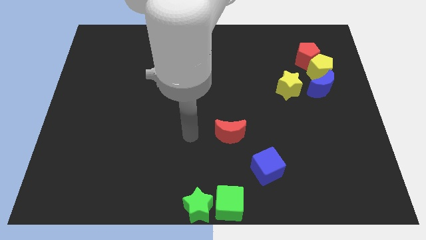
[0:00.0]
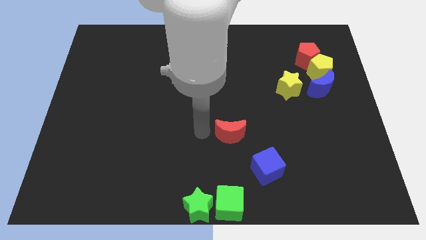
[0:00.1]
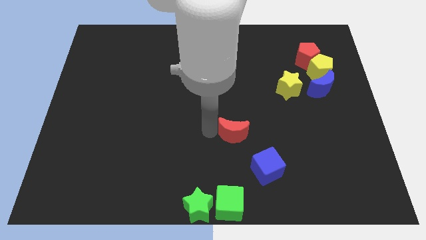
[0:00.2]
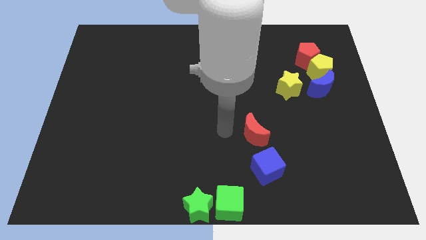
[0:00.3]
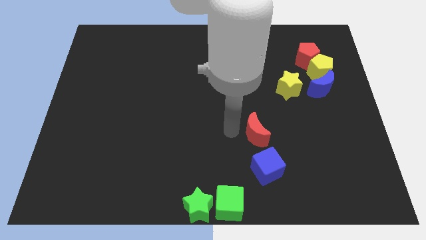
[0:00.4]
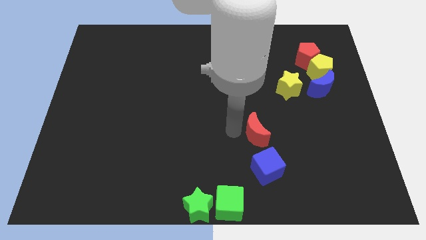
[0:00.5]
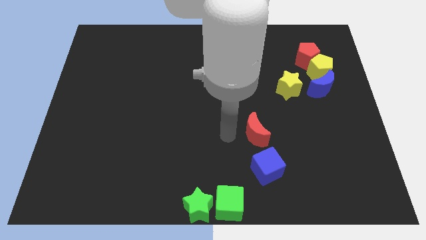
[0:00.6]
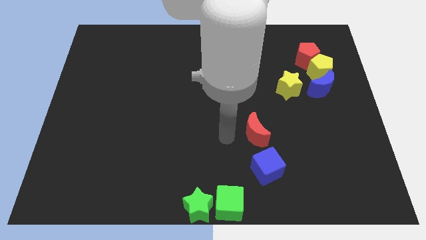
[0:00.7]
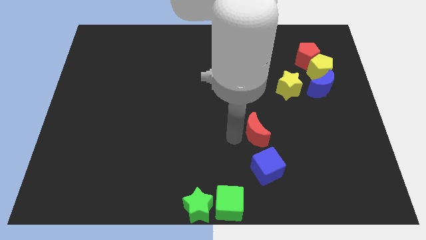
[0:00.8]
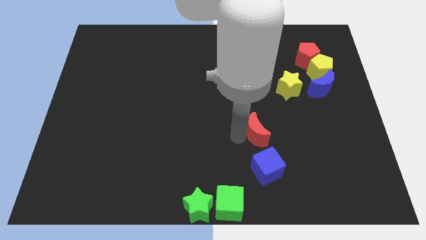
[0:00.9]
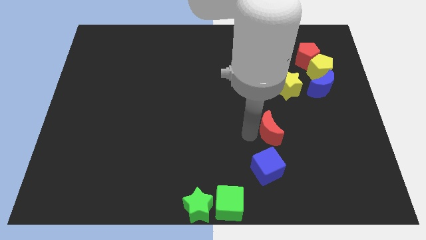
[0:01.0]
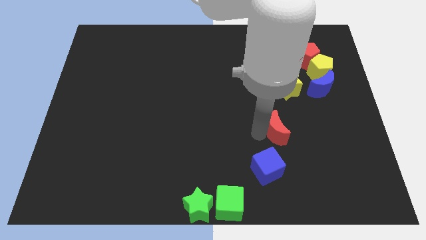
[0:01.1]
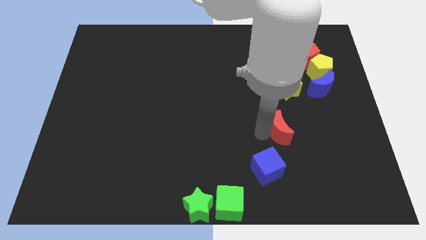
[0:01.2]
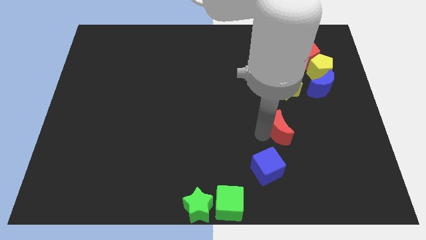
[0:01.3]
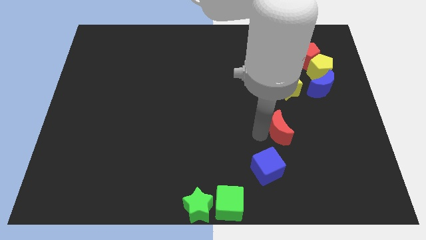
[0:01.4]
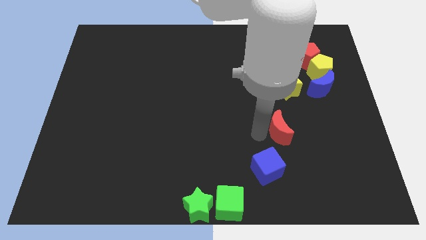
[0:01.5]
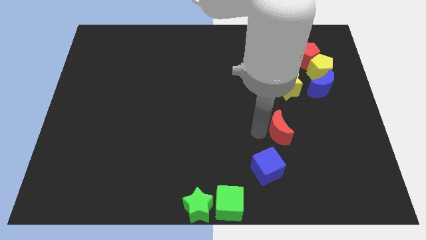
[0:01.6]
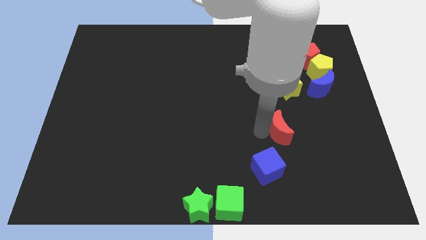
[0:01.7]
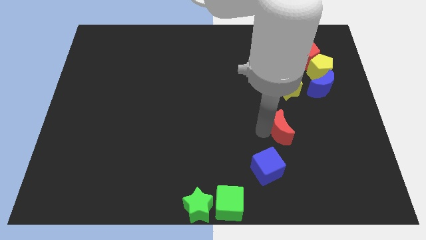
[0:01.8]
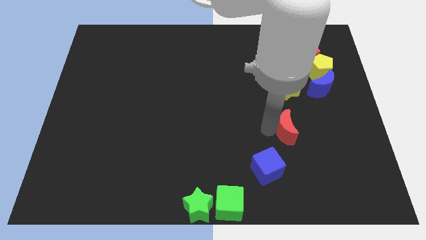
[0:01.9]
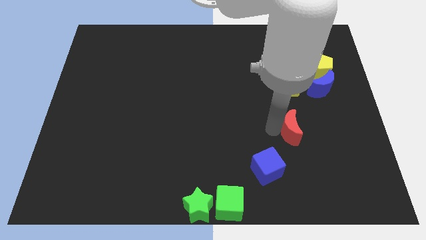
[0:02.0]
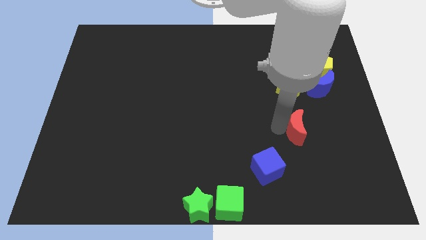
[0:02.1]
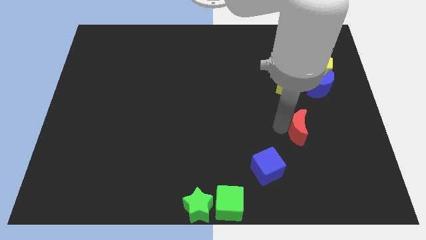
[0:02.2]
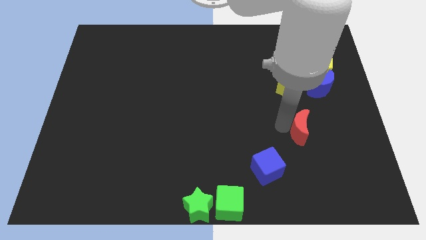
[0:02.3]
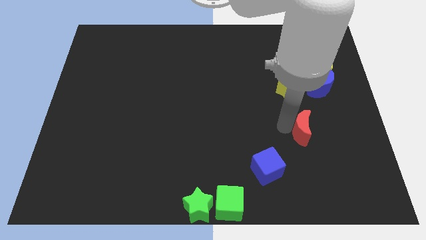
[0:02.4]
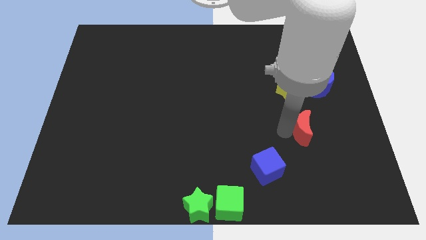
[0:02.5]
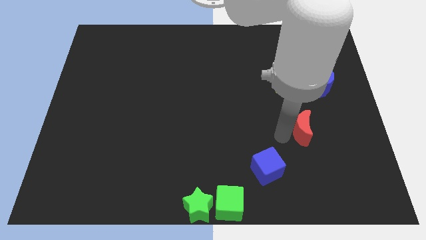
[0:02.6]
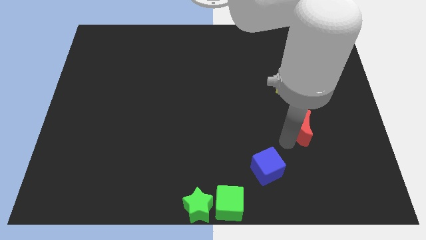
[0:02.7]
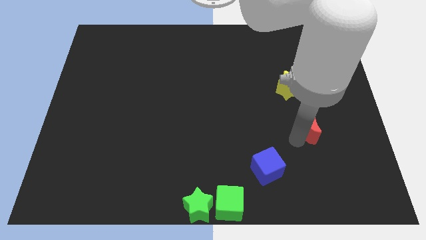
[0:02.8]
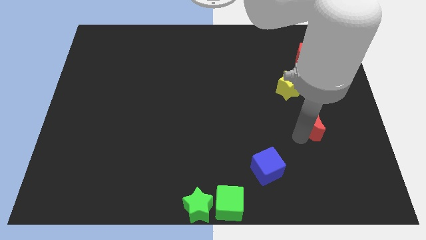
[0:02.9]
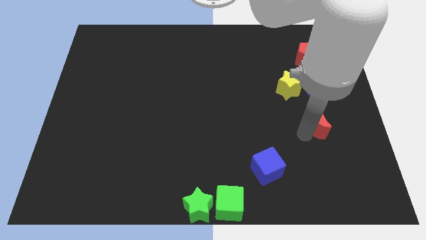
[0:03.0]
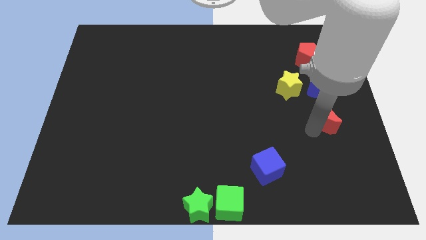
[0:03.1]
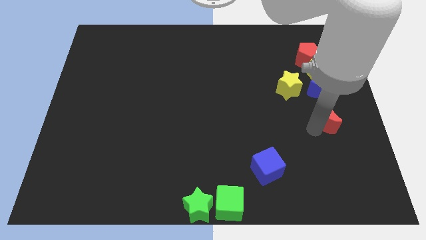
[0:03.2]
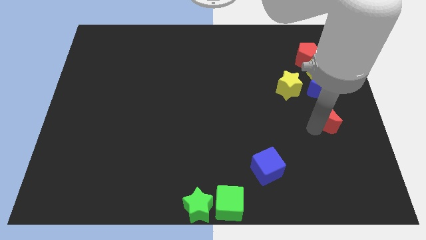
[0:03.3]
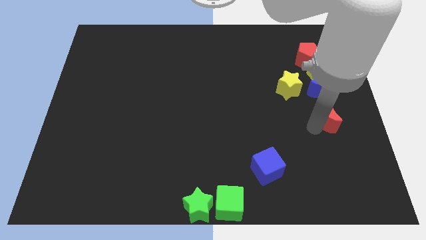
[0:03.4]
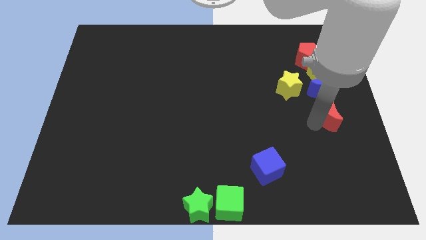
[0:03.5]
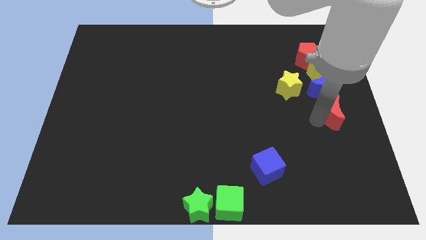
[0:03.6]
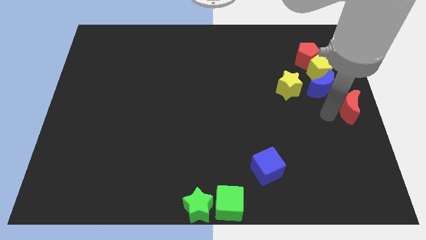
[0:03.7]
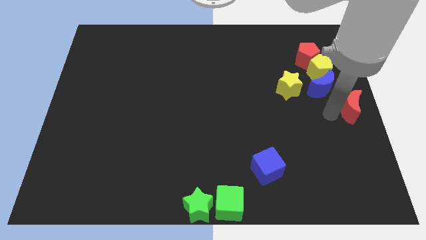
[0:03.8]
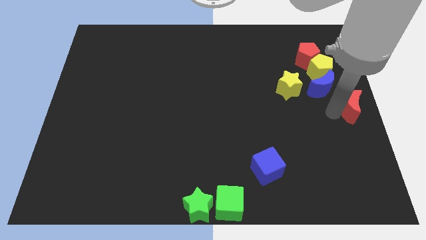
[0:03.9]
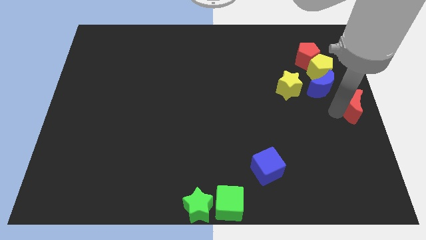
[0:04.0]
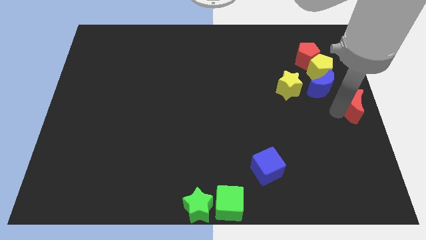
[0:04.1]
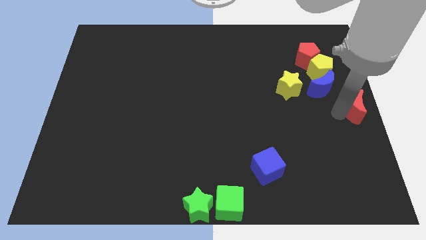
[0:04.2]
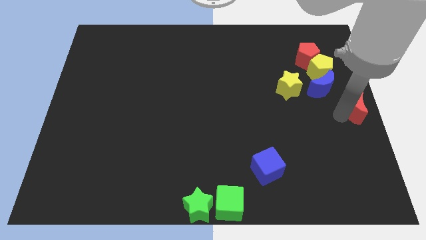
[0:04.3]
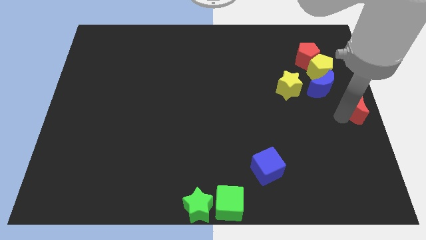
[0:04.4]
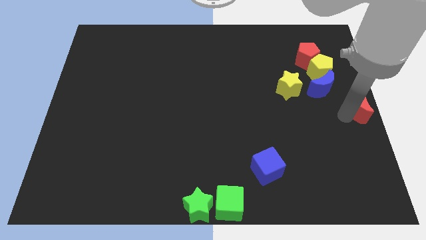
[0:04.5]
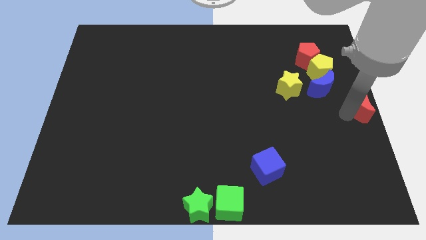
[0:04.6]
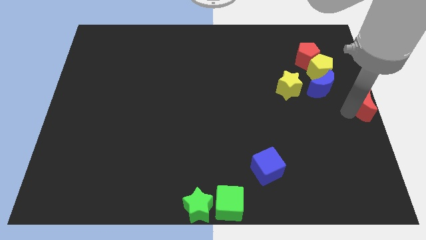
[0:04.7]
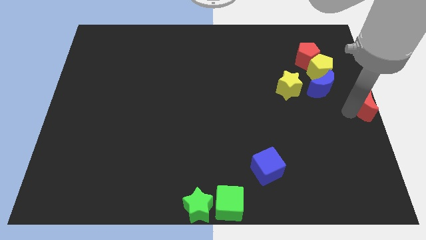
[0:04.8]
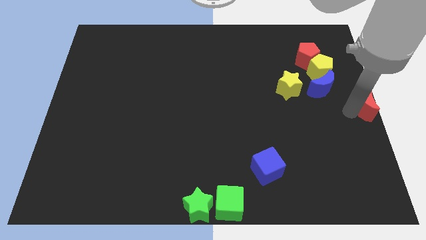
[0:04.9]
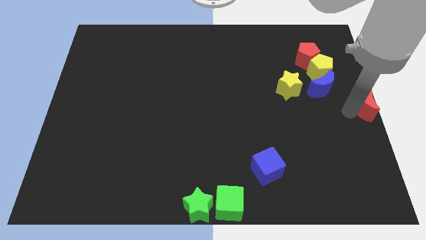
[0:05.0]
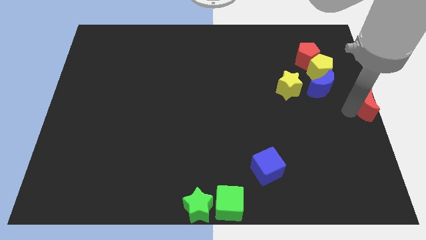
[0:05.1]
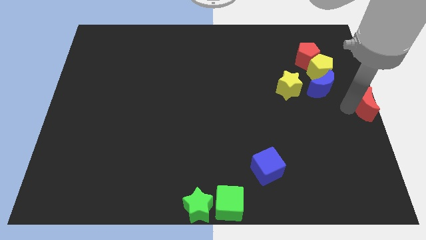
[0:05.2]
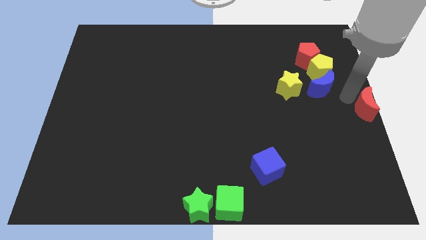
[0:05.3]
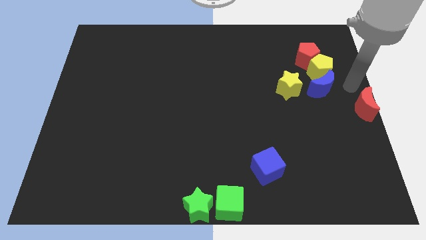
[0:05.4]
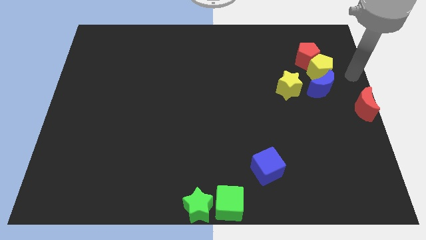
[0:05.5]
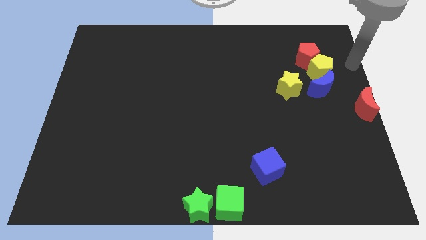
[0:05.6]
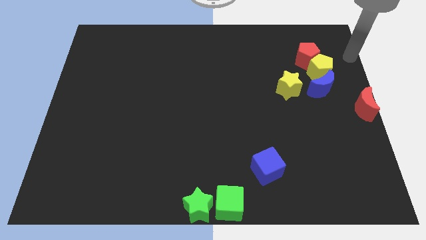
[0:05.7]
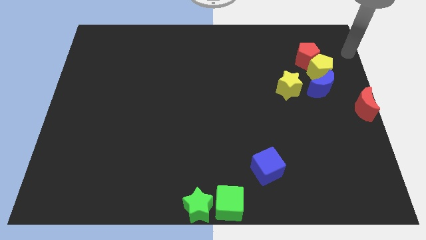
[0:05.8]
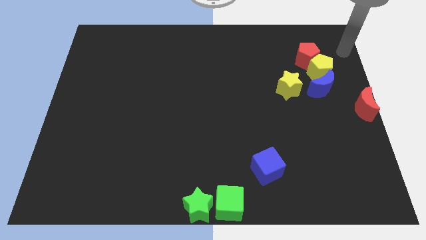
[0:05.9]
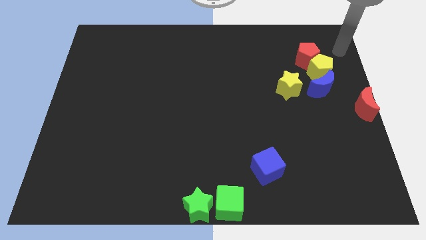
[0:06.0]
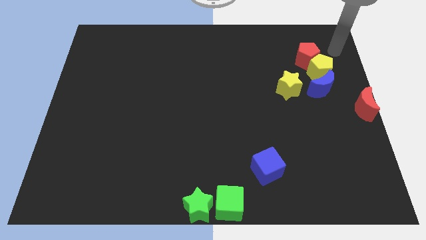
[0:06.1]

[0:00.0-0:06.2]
move red moon to the right middle corner of the board

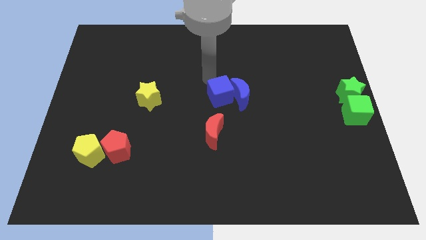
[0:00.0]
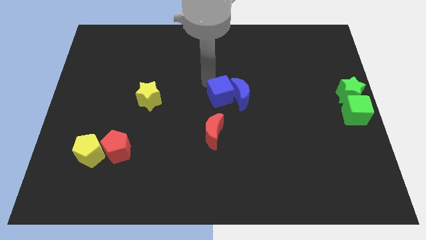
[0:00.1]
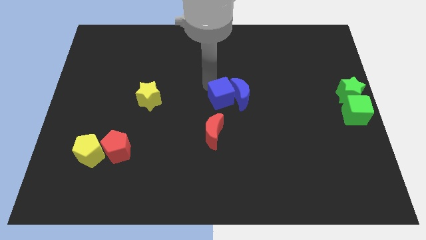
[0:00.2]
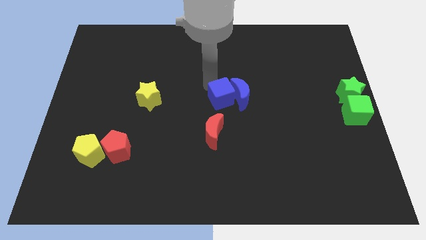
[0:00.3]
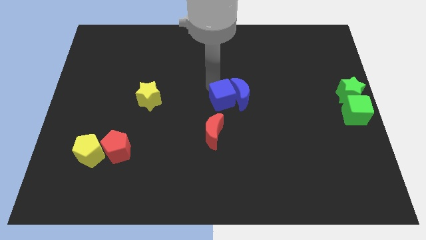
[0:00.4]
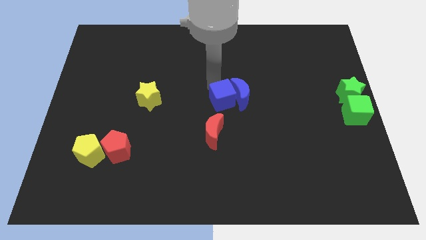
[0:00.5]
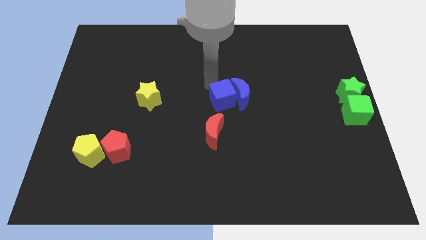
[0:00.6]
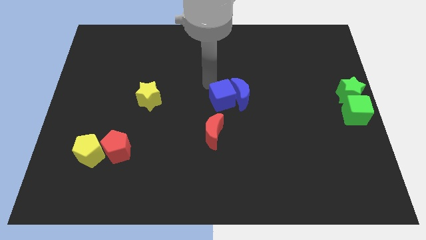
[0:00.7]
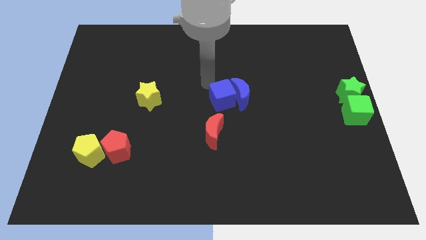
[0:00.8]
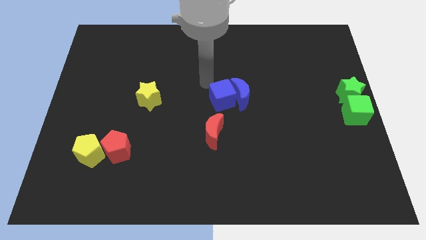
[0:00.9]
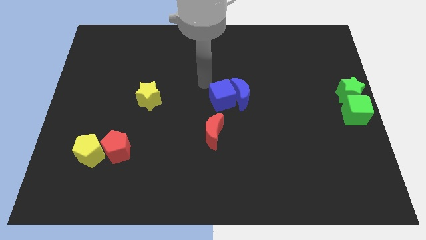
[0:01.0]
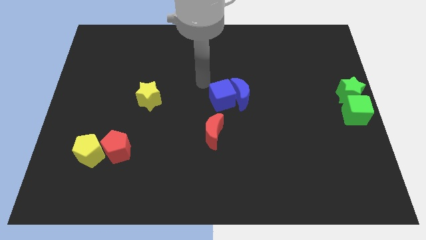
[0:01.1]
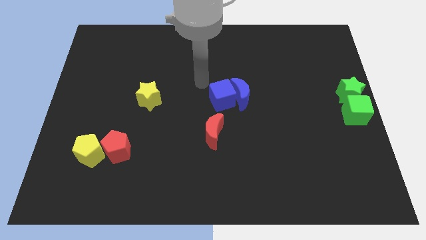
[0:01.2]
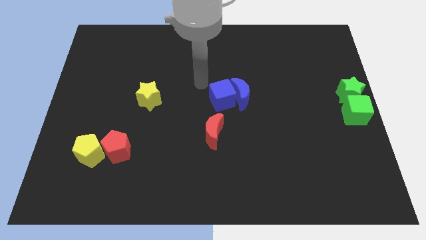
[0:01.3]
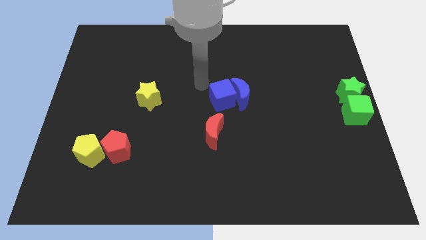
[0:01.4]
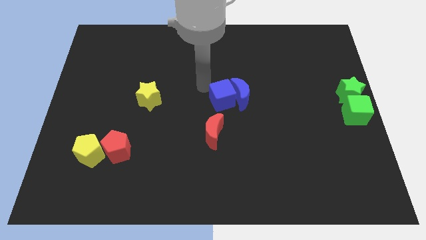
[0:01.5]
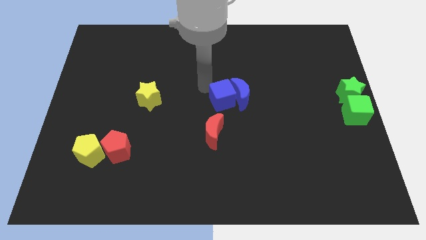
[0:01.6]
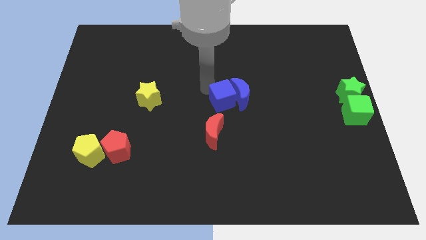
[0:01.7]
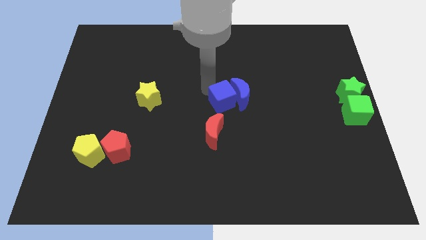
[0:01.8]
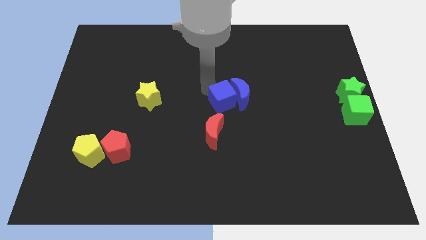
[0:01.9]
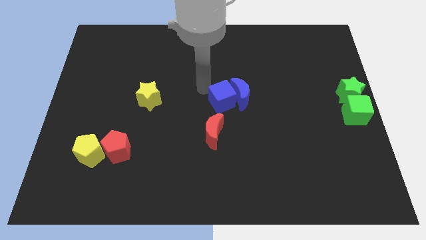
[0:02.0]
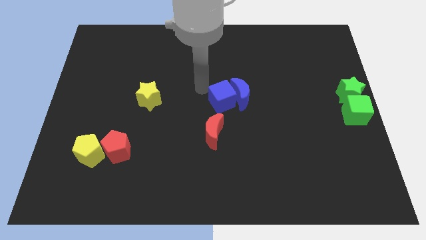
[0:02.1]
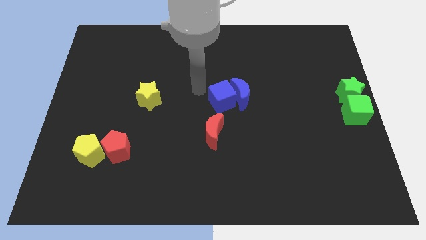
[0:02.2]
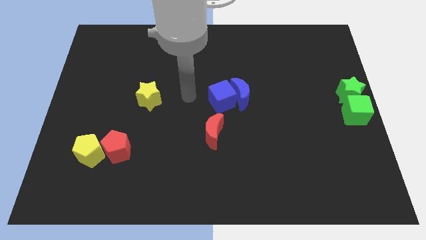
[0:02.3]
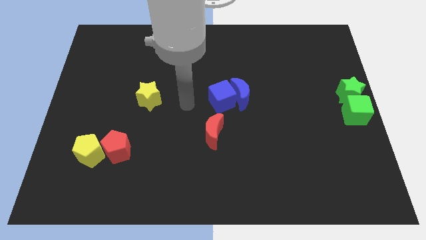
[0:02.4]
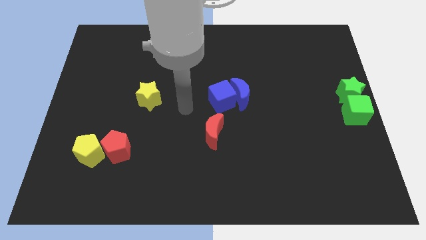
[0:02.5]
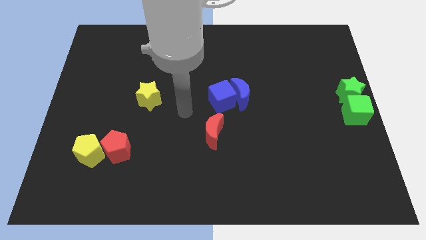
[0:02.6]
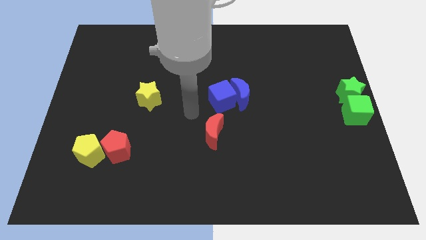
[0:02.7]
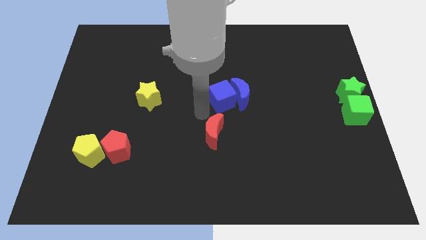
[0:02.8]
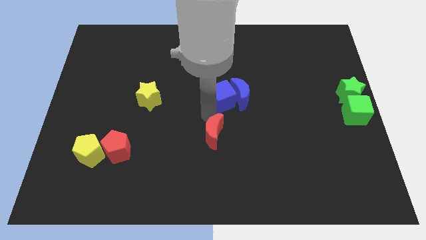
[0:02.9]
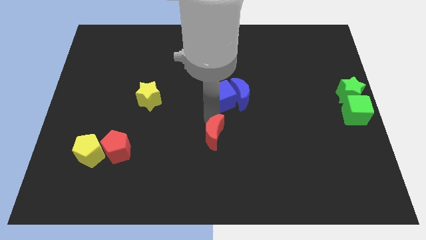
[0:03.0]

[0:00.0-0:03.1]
place the arm near the red moon
